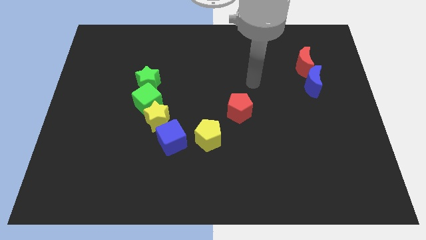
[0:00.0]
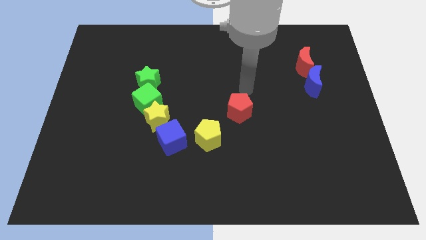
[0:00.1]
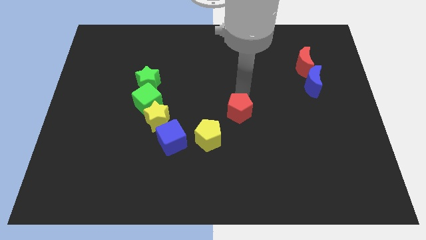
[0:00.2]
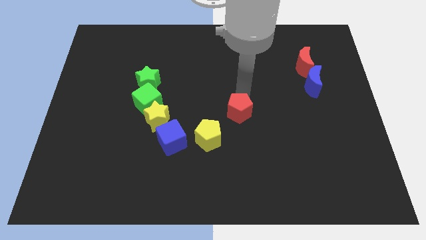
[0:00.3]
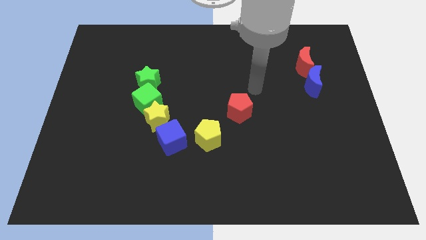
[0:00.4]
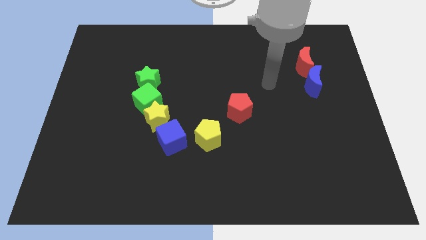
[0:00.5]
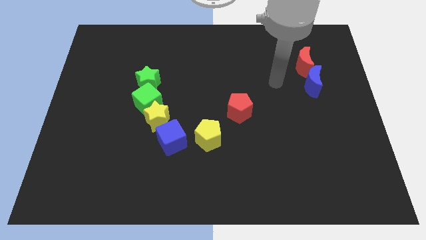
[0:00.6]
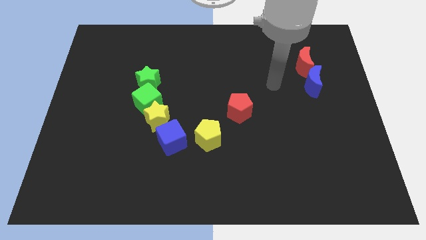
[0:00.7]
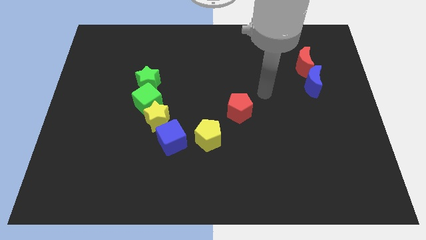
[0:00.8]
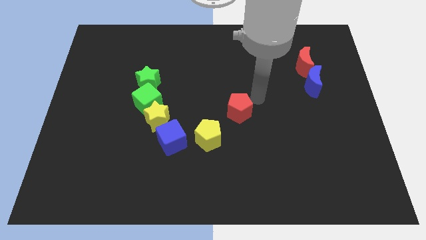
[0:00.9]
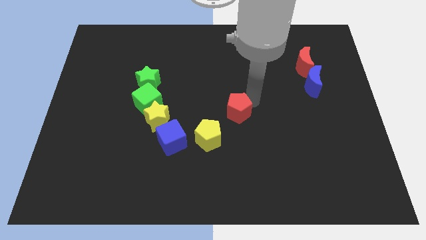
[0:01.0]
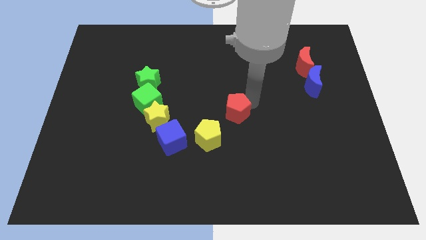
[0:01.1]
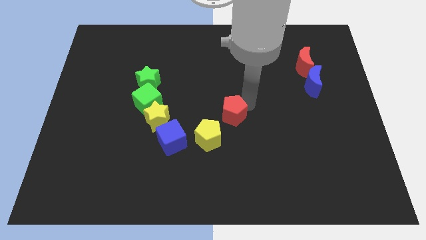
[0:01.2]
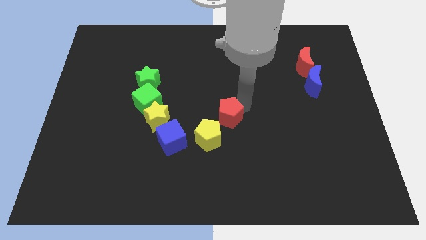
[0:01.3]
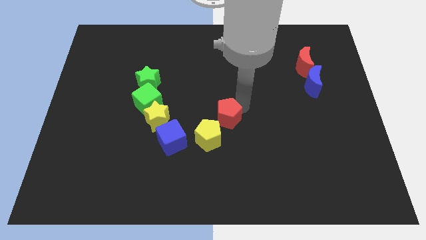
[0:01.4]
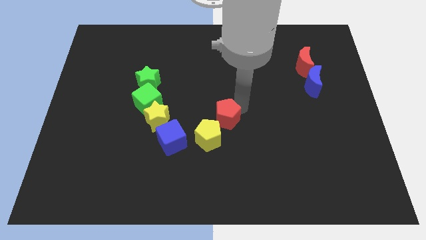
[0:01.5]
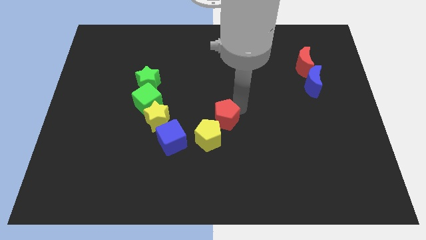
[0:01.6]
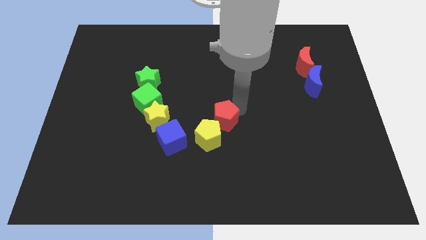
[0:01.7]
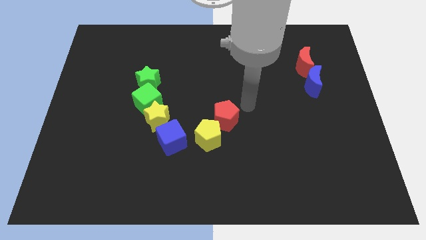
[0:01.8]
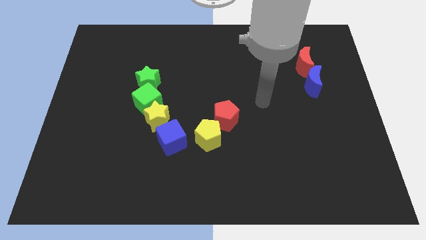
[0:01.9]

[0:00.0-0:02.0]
place the red pentagon to the top right of yellow pentagon

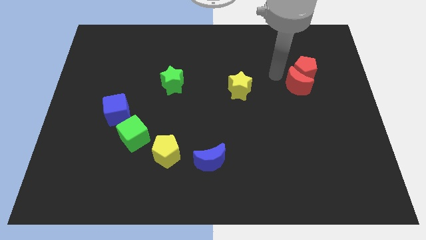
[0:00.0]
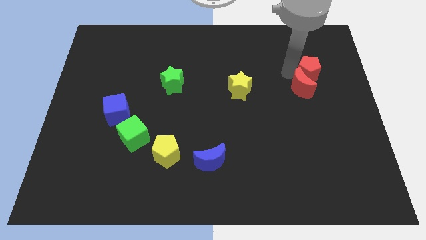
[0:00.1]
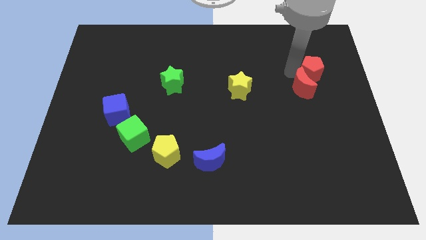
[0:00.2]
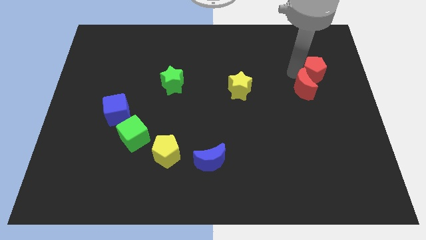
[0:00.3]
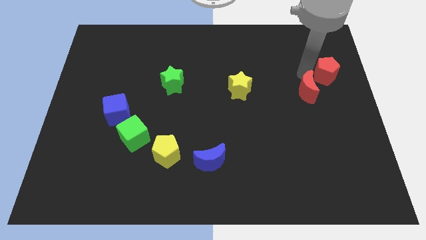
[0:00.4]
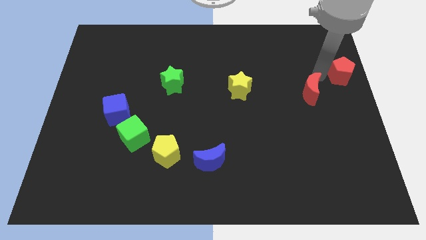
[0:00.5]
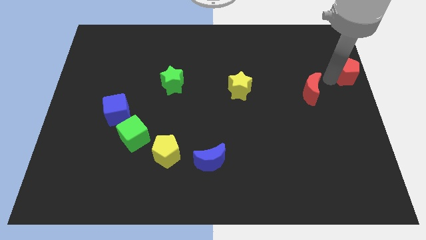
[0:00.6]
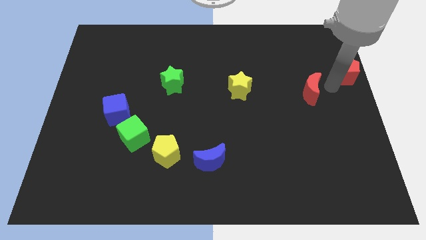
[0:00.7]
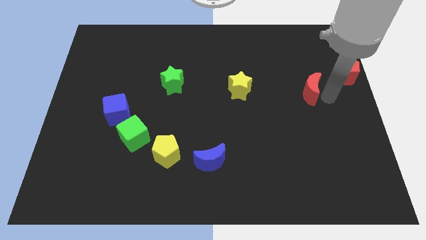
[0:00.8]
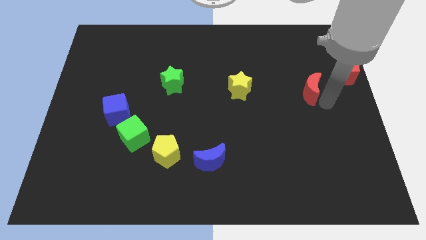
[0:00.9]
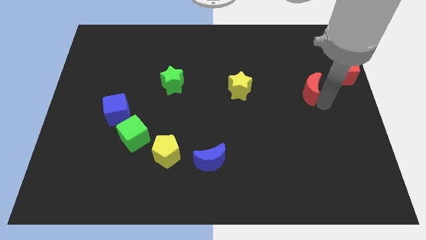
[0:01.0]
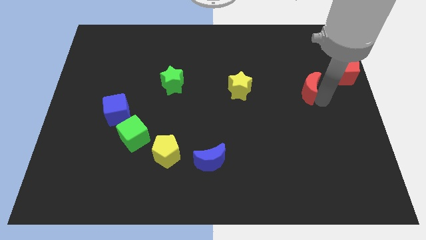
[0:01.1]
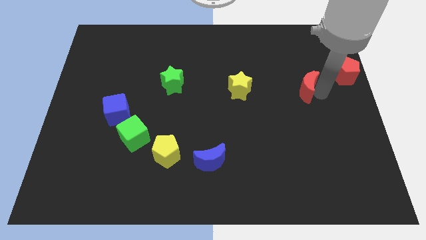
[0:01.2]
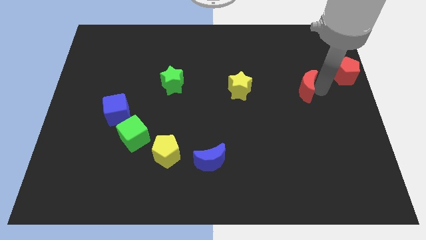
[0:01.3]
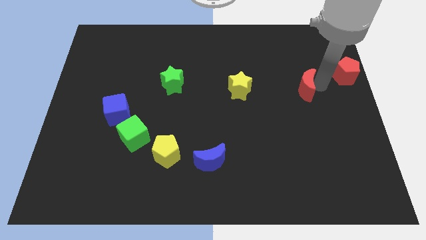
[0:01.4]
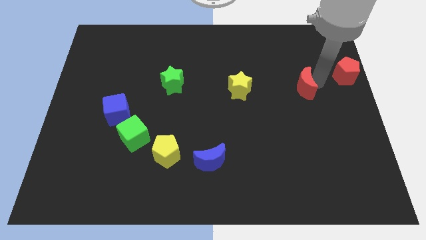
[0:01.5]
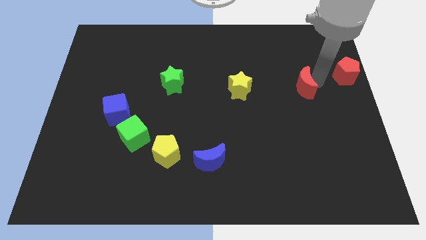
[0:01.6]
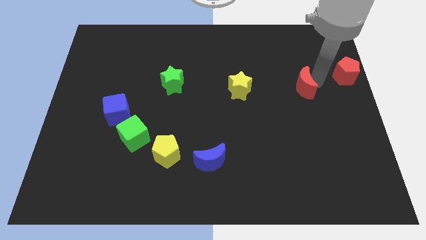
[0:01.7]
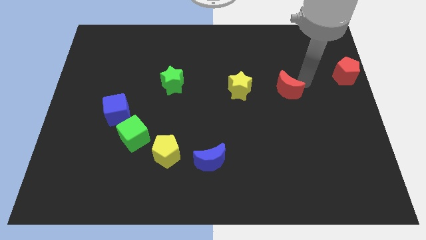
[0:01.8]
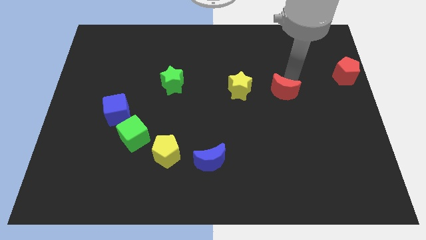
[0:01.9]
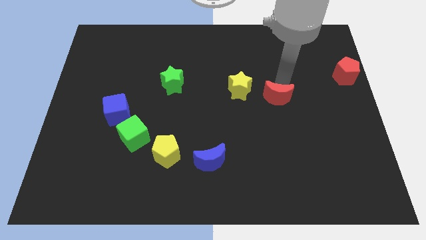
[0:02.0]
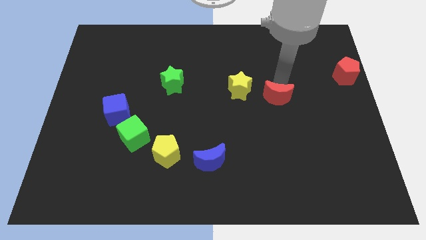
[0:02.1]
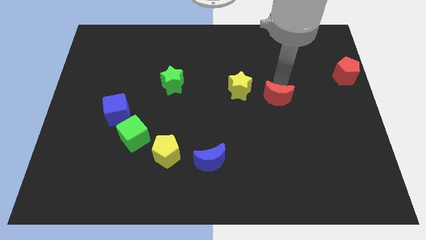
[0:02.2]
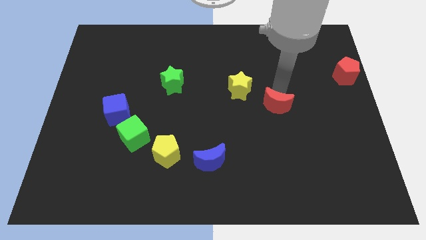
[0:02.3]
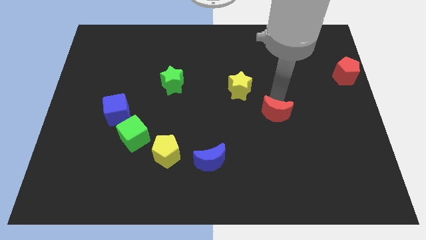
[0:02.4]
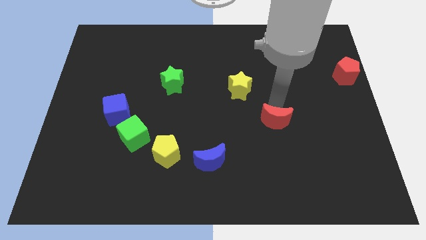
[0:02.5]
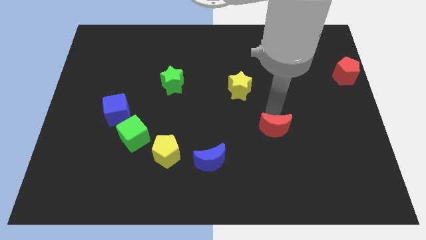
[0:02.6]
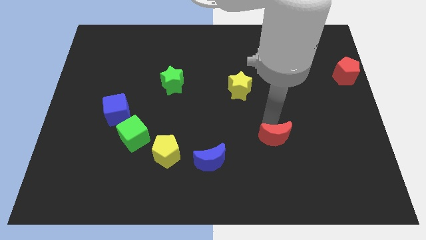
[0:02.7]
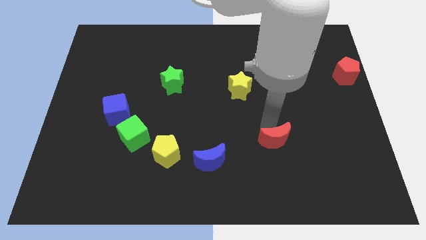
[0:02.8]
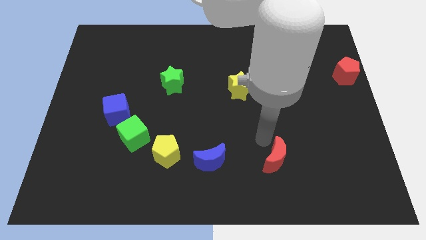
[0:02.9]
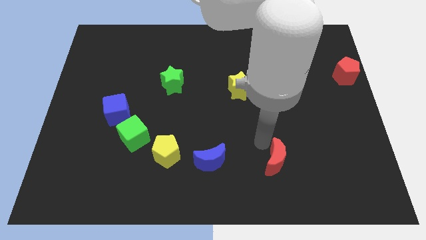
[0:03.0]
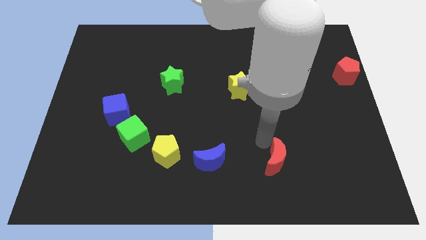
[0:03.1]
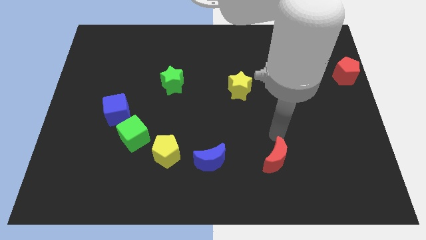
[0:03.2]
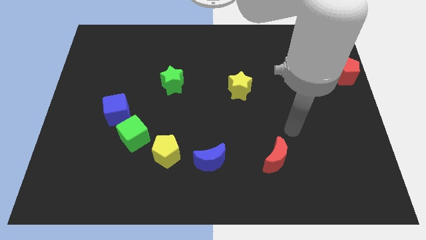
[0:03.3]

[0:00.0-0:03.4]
put the red crescent to the right side of the blue crescent

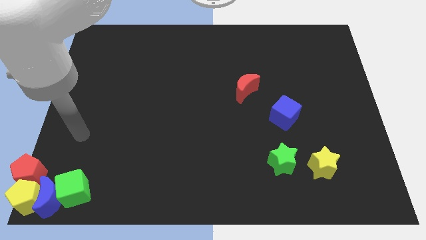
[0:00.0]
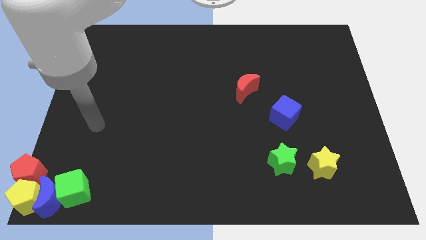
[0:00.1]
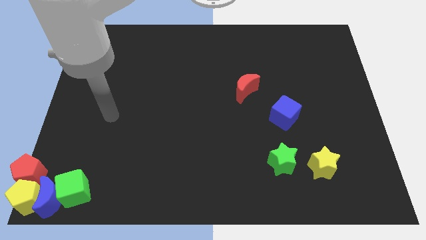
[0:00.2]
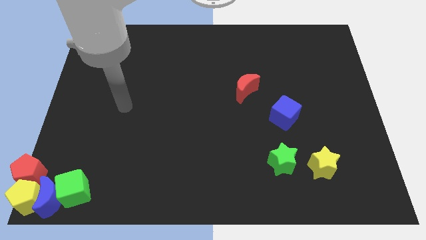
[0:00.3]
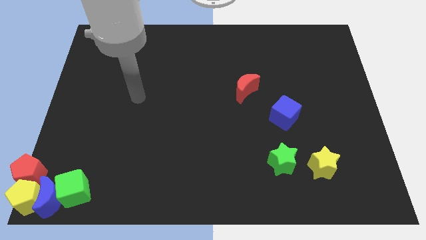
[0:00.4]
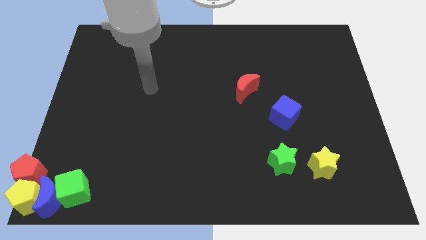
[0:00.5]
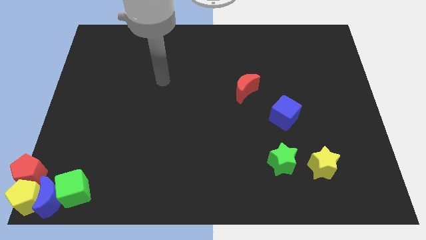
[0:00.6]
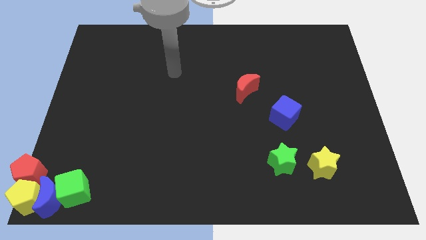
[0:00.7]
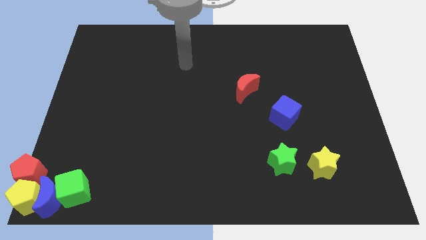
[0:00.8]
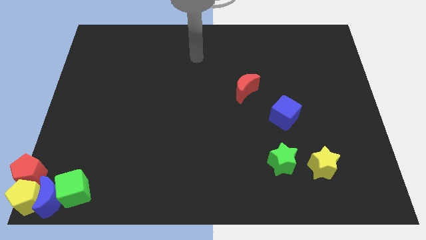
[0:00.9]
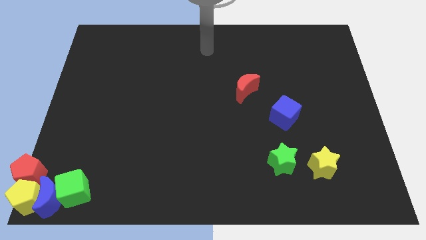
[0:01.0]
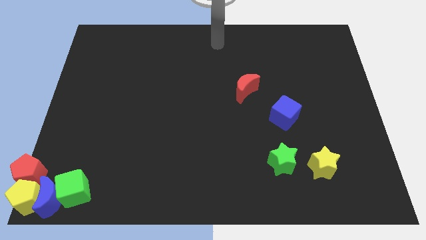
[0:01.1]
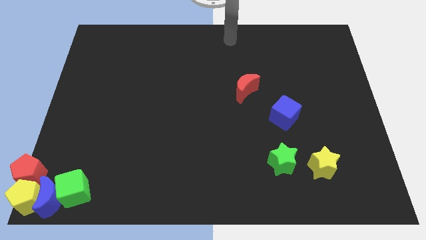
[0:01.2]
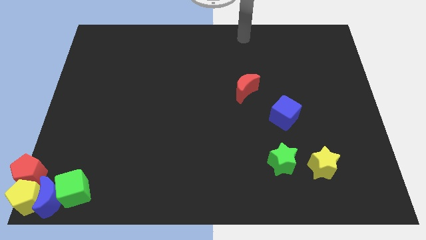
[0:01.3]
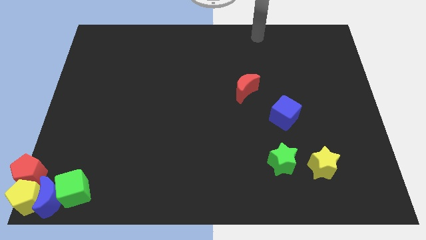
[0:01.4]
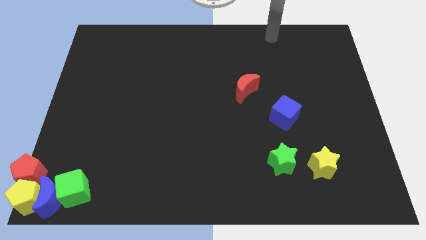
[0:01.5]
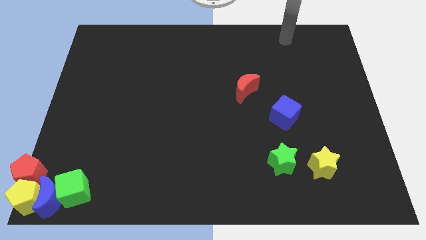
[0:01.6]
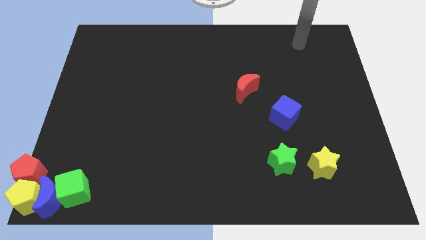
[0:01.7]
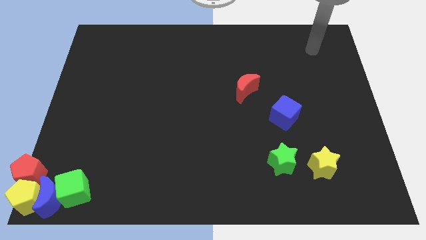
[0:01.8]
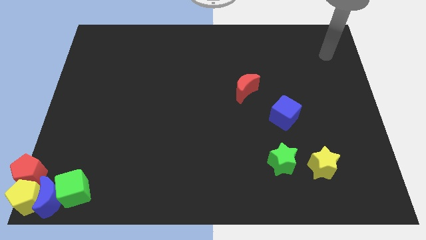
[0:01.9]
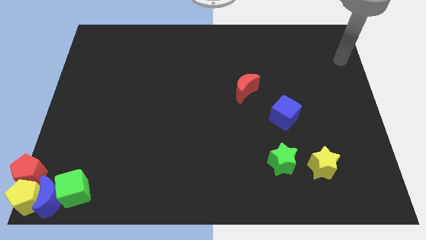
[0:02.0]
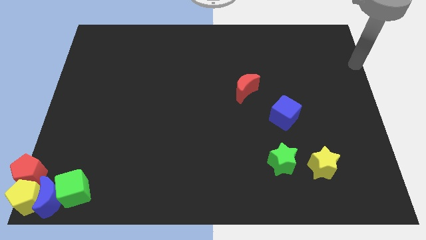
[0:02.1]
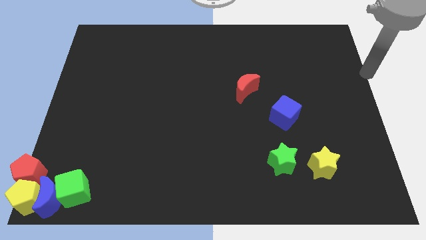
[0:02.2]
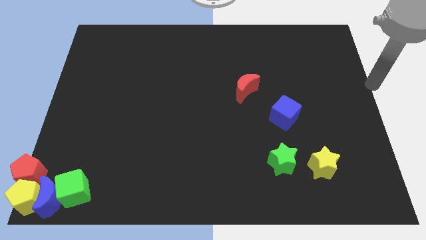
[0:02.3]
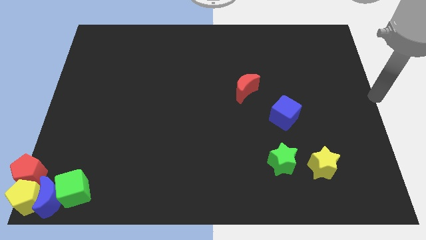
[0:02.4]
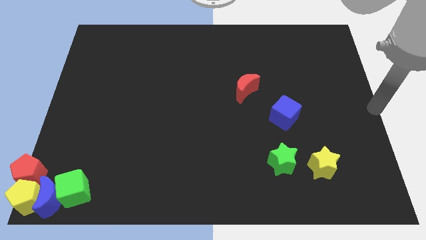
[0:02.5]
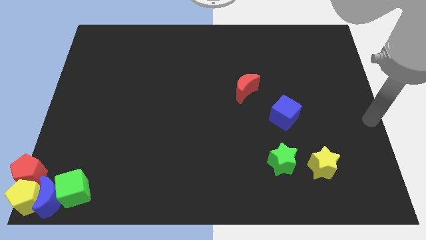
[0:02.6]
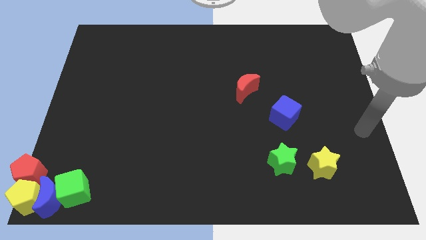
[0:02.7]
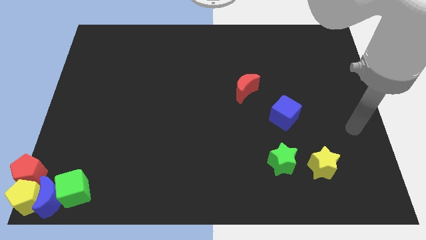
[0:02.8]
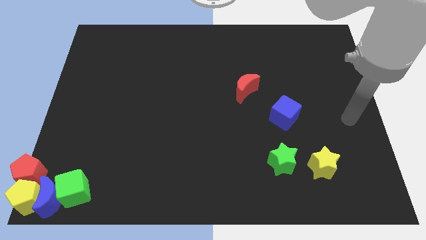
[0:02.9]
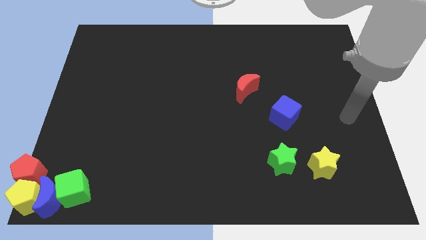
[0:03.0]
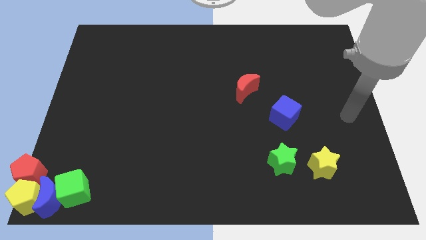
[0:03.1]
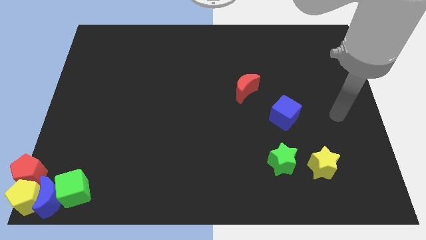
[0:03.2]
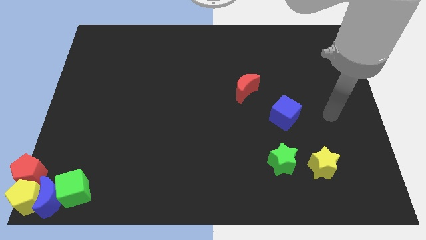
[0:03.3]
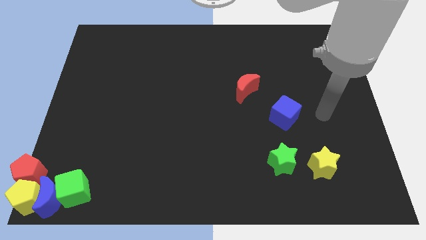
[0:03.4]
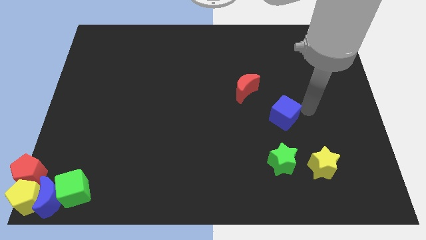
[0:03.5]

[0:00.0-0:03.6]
place your arm to the right of blue cube
